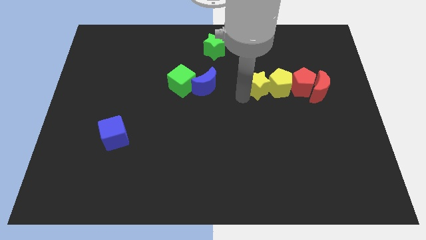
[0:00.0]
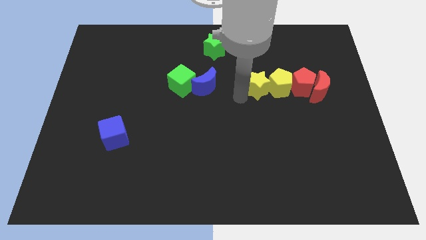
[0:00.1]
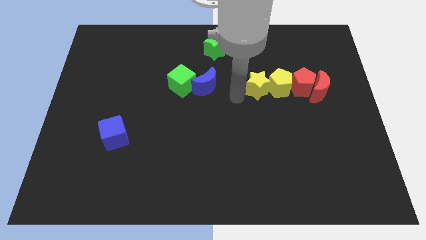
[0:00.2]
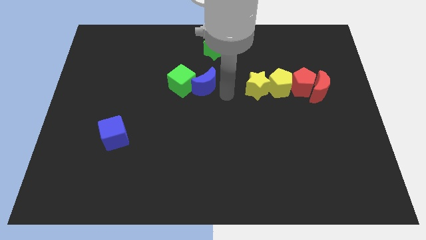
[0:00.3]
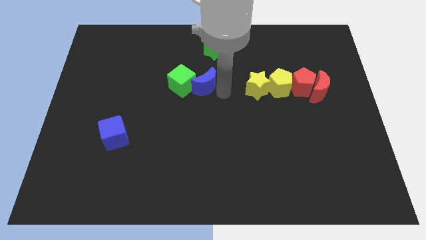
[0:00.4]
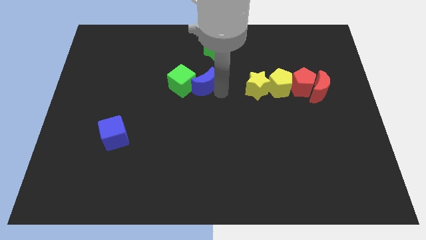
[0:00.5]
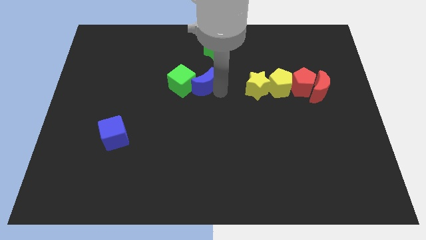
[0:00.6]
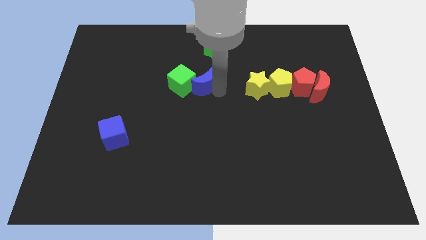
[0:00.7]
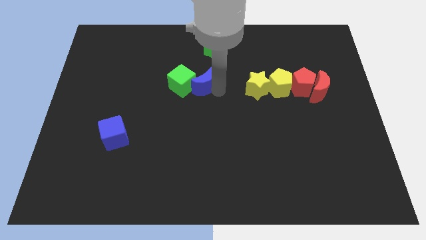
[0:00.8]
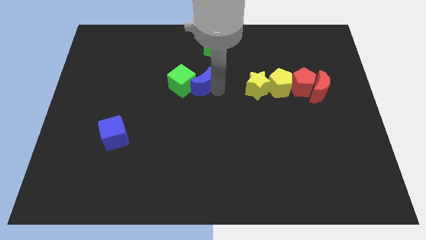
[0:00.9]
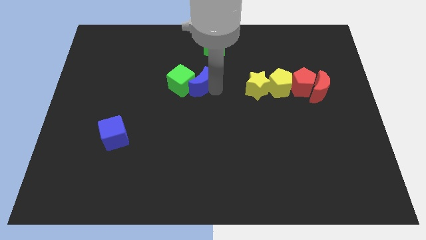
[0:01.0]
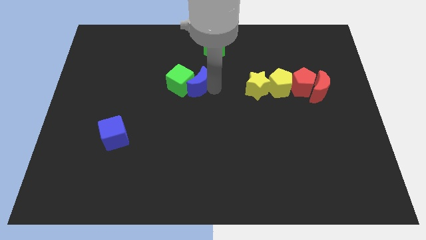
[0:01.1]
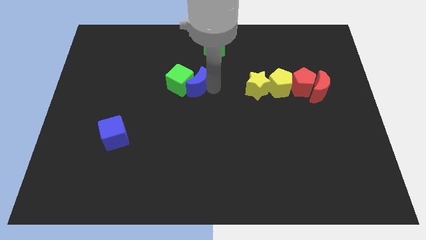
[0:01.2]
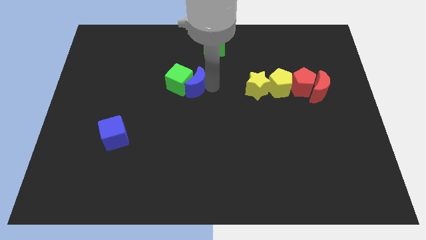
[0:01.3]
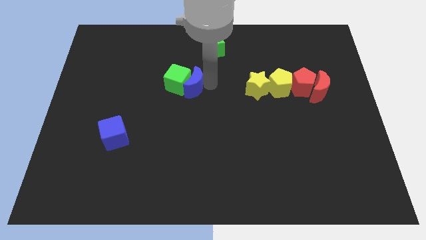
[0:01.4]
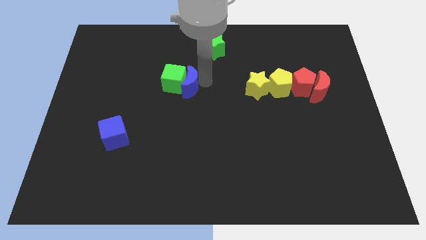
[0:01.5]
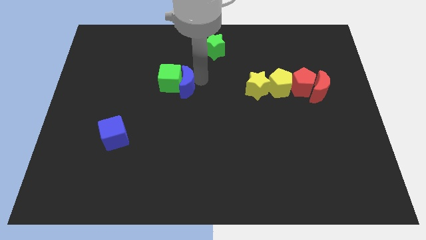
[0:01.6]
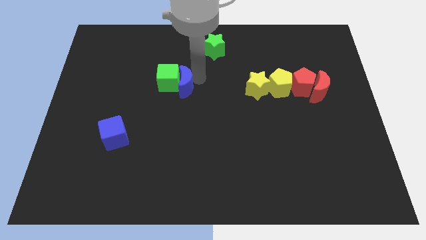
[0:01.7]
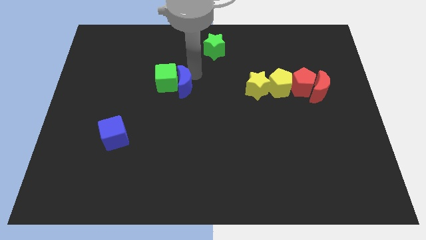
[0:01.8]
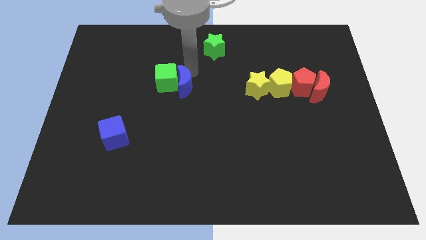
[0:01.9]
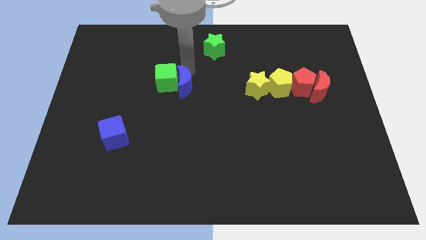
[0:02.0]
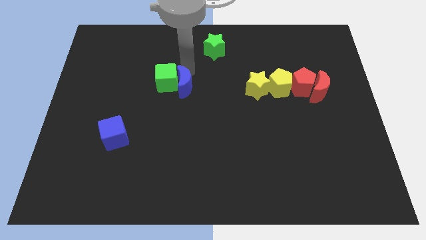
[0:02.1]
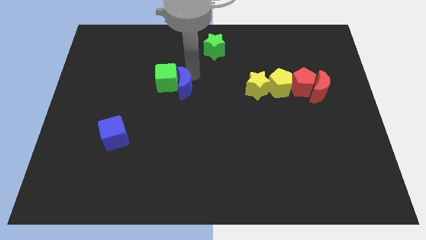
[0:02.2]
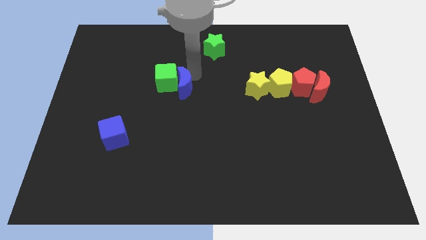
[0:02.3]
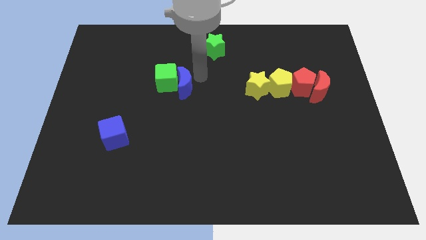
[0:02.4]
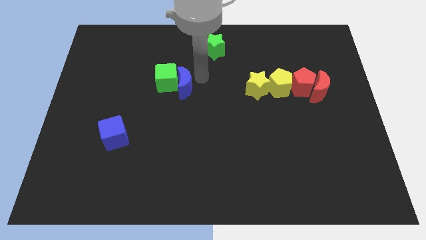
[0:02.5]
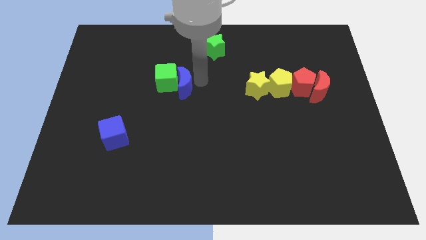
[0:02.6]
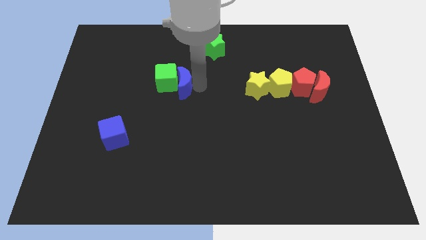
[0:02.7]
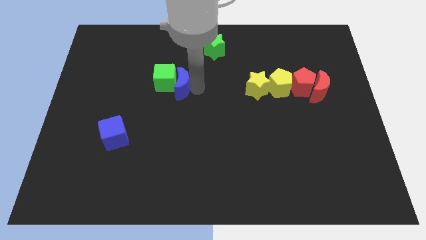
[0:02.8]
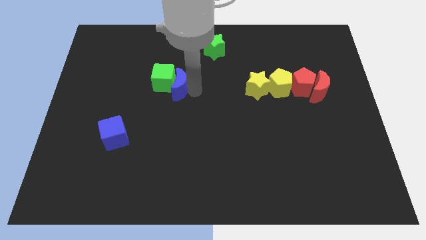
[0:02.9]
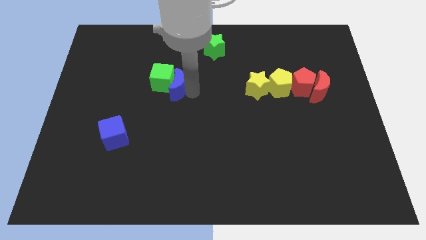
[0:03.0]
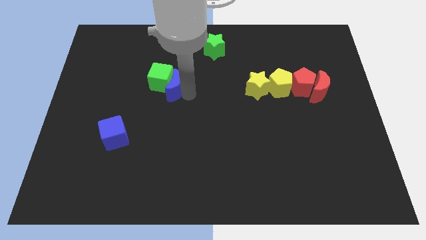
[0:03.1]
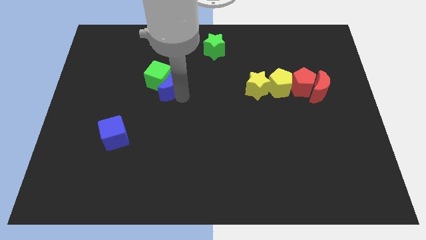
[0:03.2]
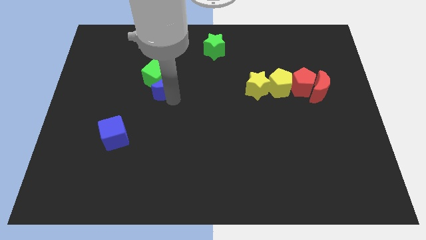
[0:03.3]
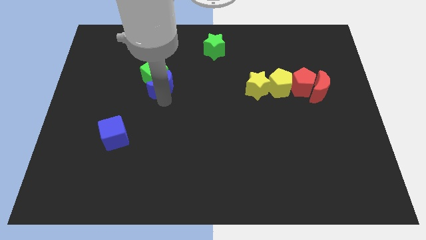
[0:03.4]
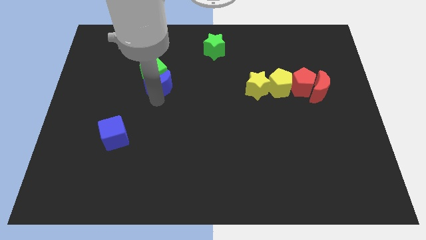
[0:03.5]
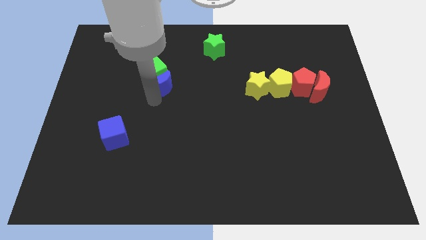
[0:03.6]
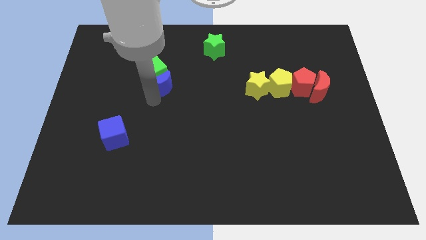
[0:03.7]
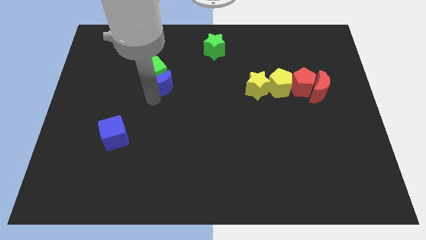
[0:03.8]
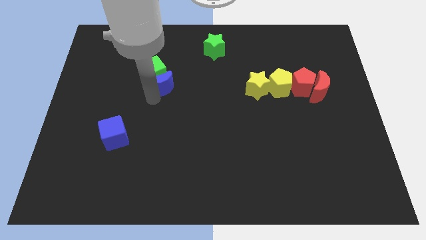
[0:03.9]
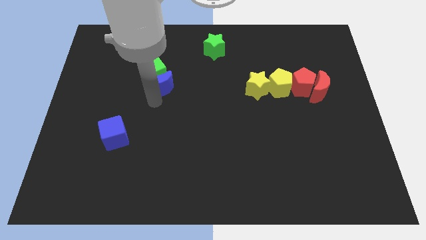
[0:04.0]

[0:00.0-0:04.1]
push the blue moon into the green cube to the left

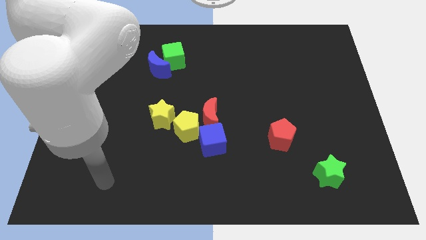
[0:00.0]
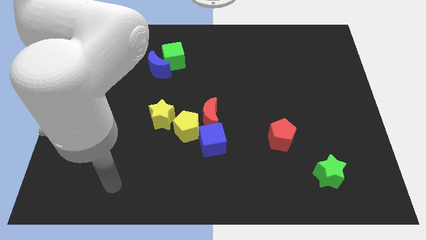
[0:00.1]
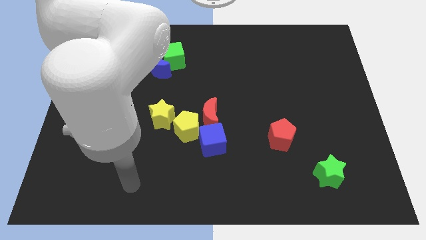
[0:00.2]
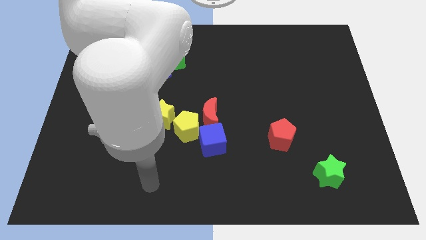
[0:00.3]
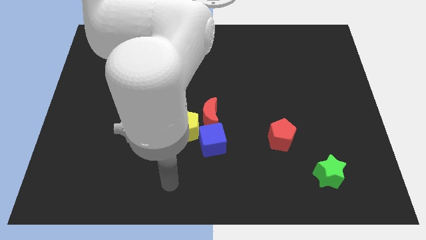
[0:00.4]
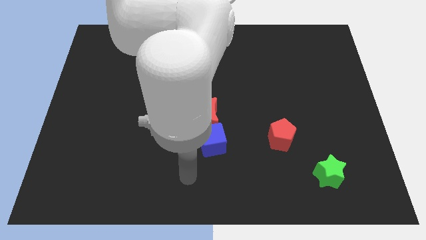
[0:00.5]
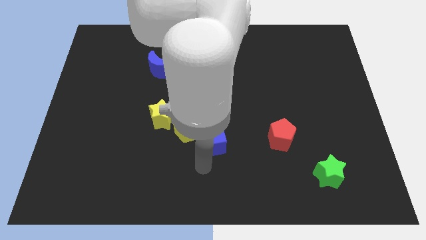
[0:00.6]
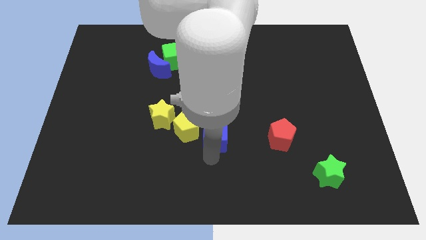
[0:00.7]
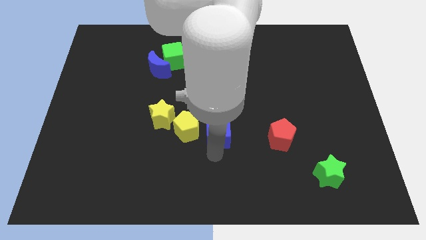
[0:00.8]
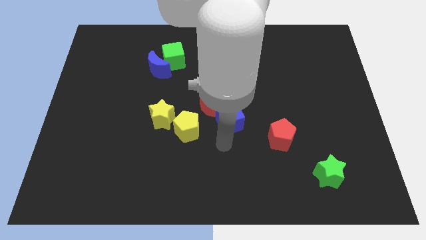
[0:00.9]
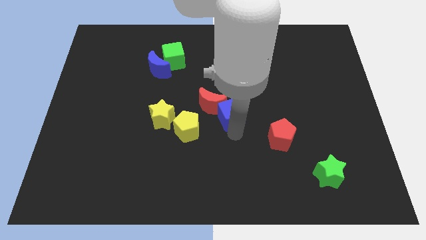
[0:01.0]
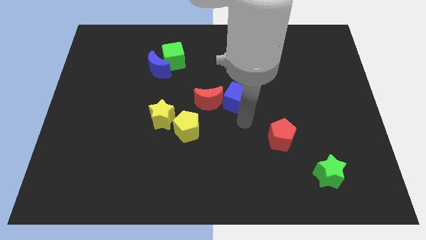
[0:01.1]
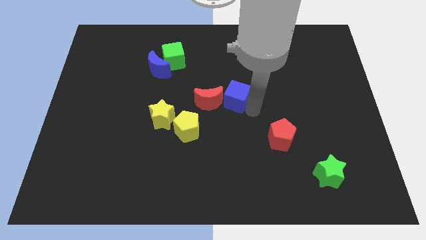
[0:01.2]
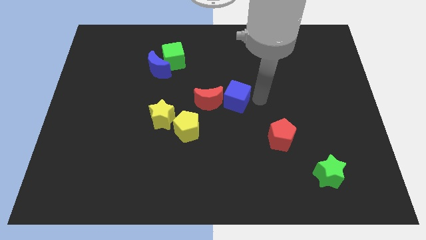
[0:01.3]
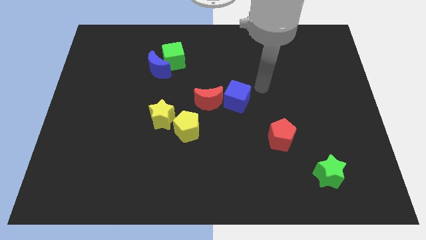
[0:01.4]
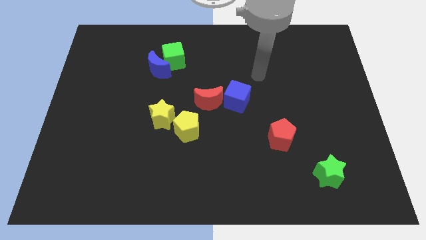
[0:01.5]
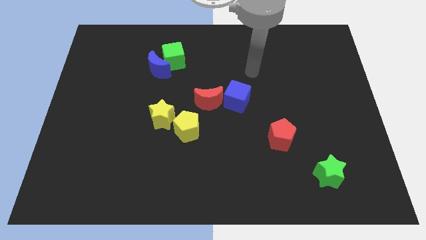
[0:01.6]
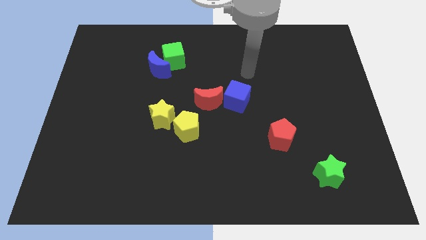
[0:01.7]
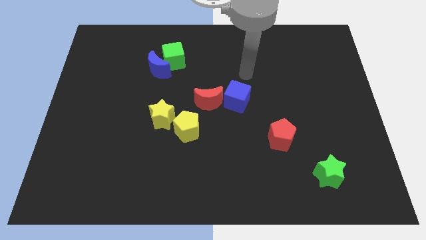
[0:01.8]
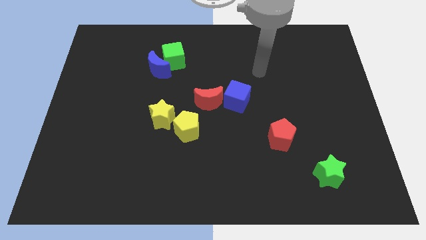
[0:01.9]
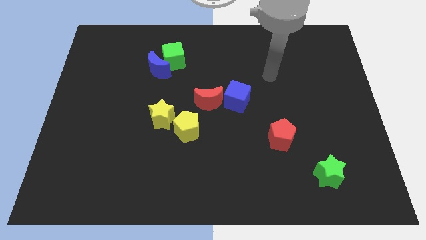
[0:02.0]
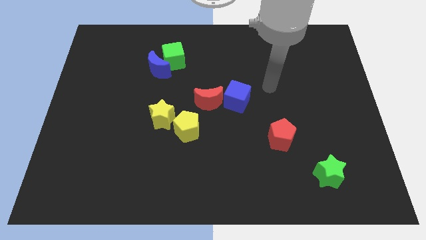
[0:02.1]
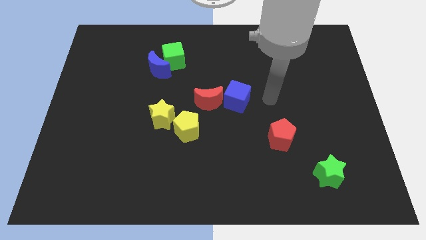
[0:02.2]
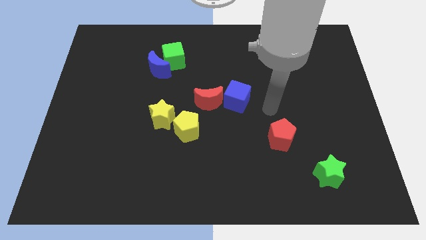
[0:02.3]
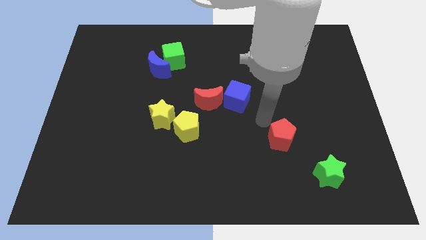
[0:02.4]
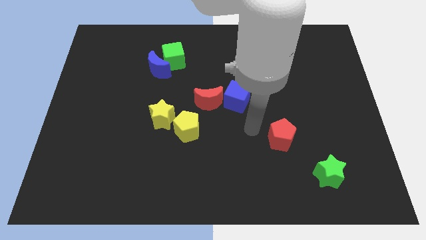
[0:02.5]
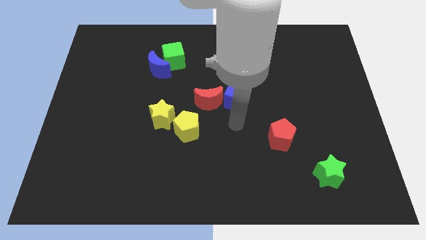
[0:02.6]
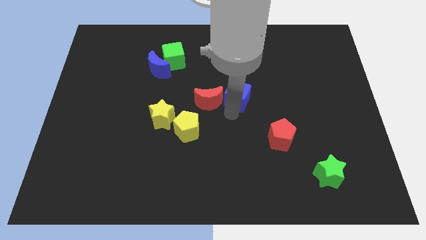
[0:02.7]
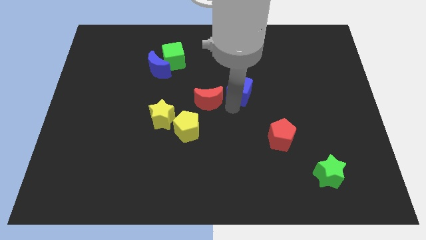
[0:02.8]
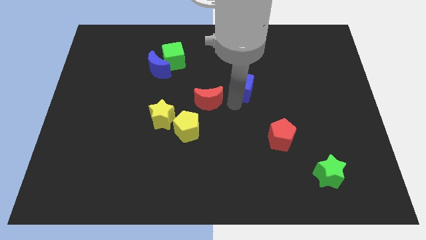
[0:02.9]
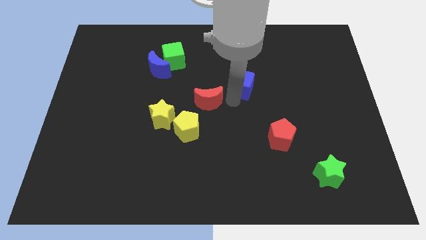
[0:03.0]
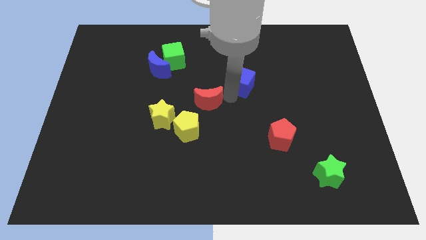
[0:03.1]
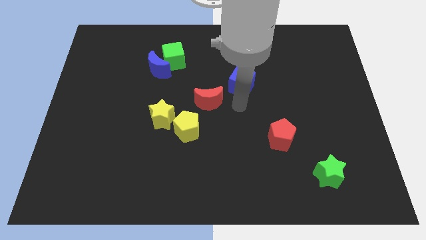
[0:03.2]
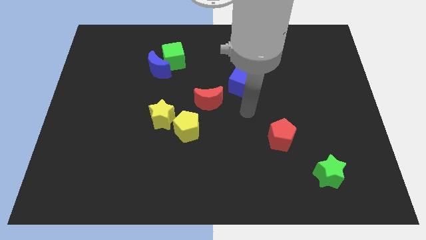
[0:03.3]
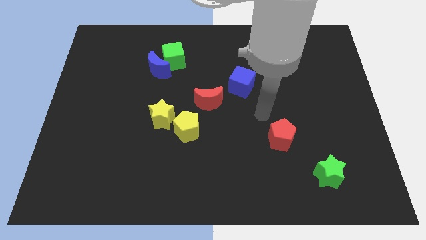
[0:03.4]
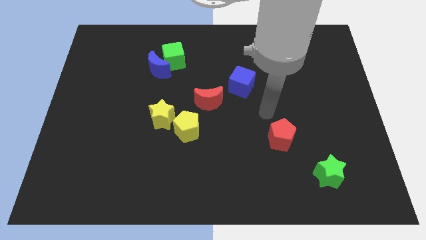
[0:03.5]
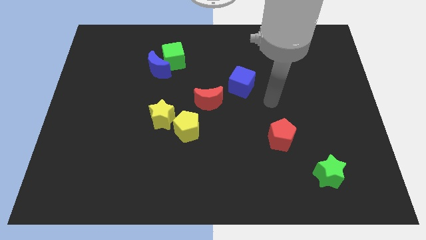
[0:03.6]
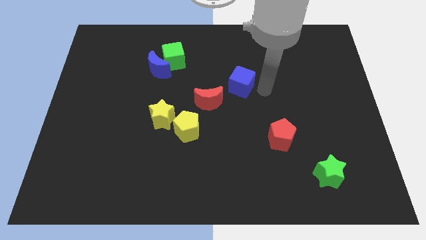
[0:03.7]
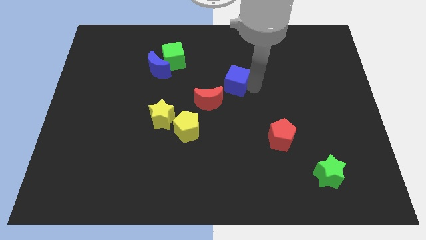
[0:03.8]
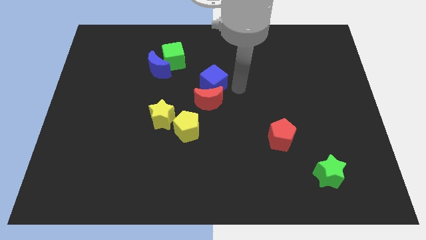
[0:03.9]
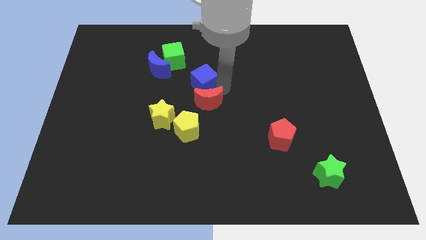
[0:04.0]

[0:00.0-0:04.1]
move the blue cube to the bottom of the red crescent

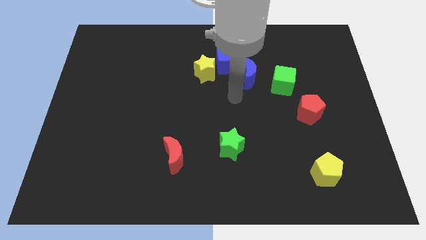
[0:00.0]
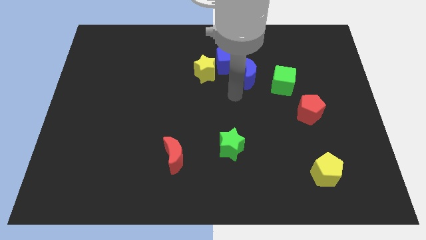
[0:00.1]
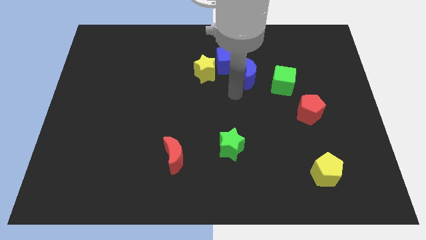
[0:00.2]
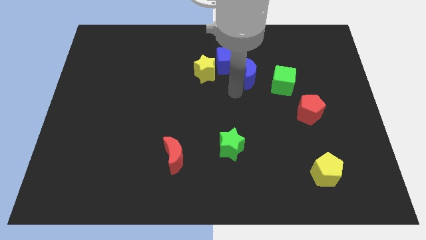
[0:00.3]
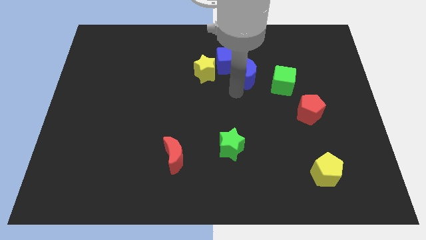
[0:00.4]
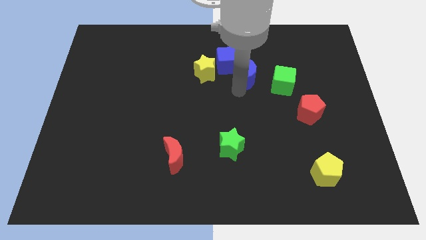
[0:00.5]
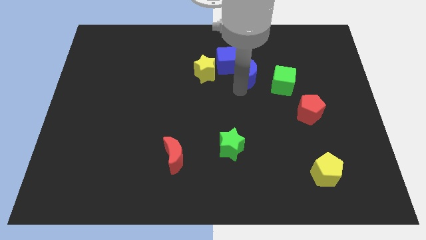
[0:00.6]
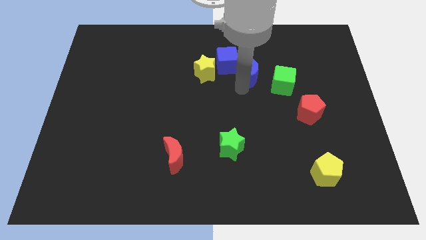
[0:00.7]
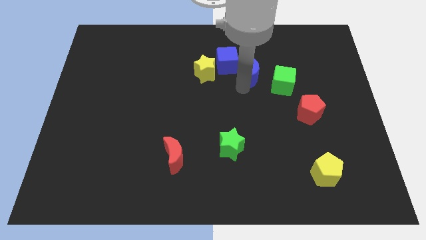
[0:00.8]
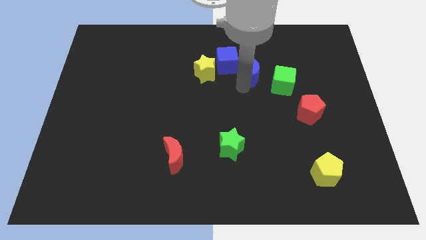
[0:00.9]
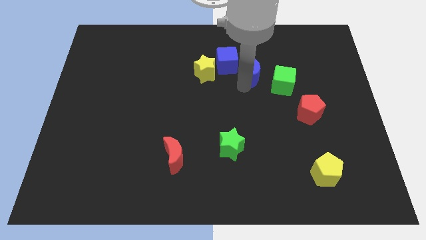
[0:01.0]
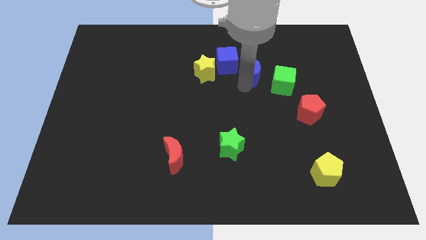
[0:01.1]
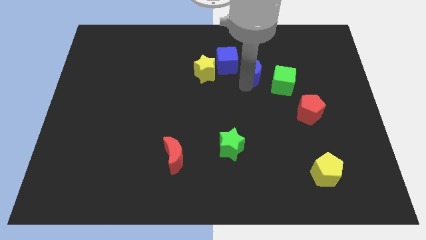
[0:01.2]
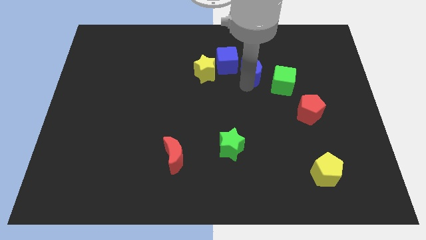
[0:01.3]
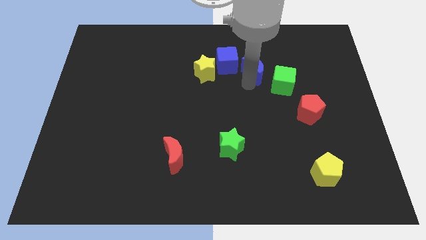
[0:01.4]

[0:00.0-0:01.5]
place blue moon in between blue and green cubes
